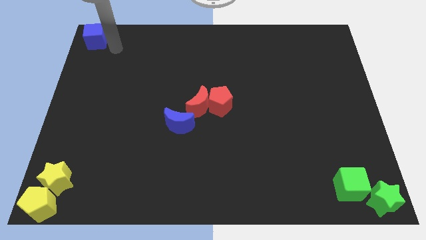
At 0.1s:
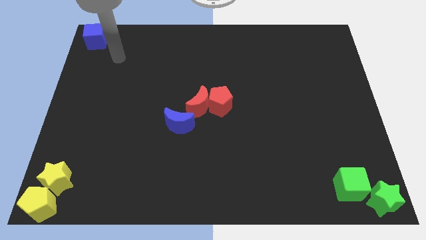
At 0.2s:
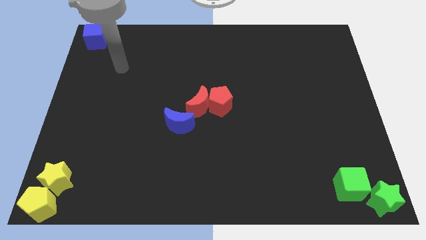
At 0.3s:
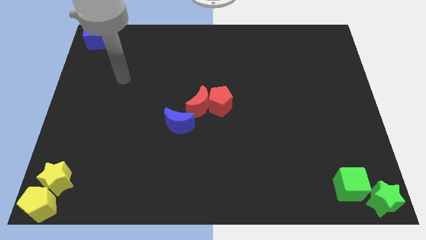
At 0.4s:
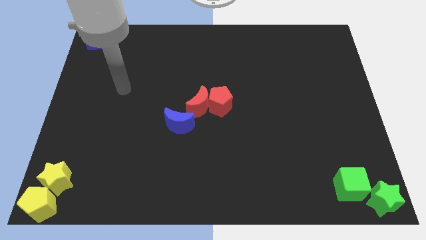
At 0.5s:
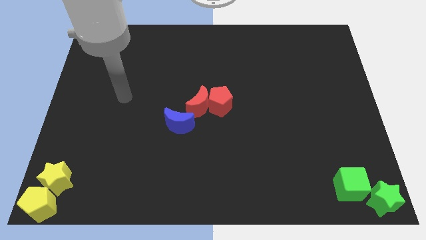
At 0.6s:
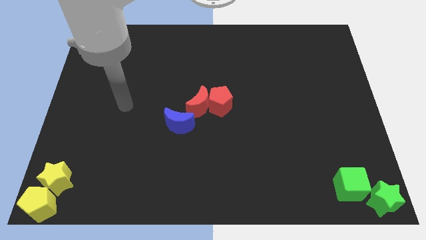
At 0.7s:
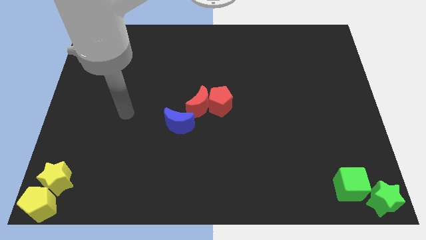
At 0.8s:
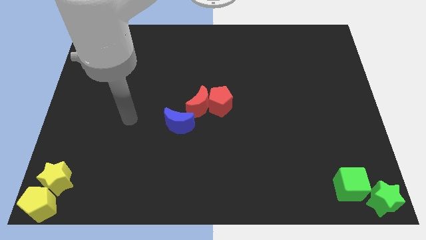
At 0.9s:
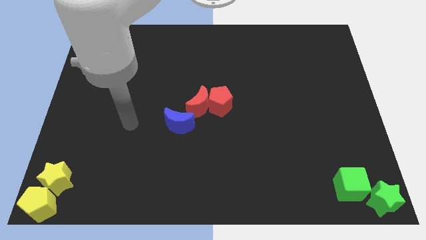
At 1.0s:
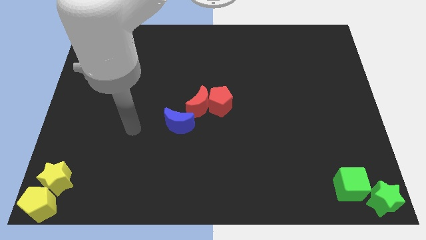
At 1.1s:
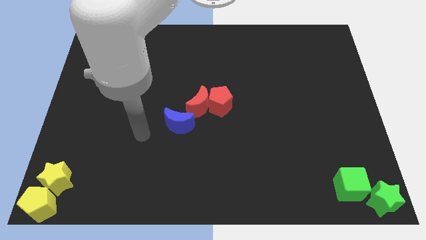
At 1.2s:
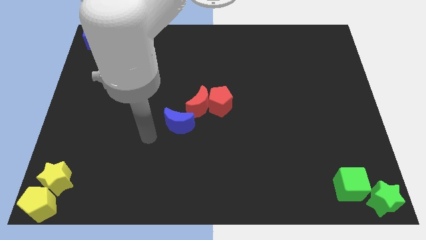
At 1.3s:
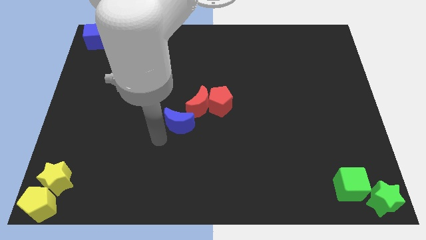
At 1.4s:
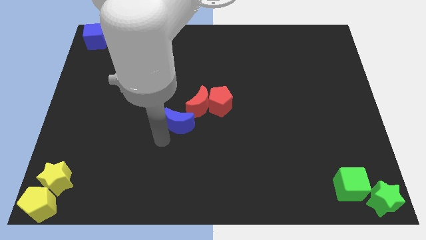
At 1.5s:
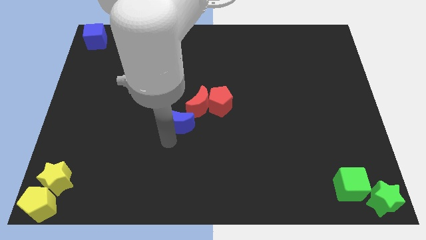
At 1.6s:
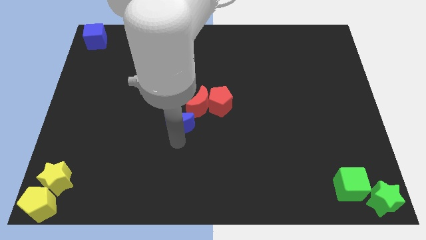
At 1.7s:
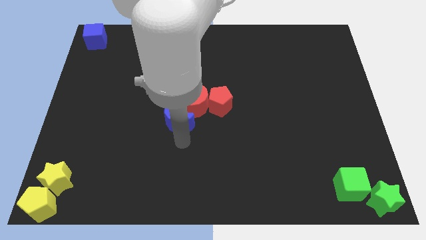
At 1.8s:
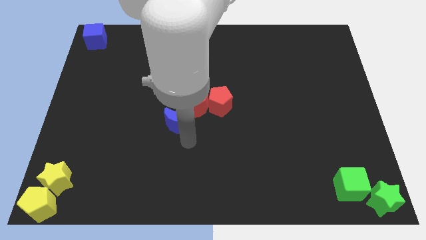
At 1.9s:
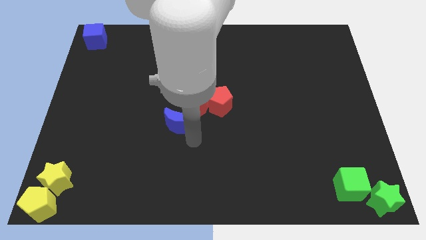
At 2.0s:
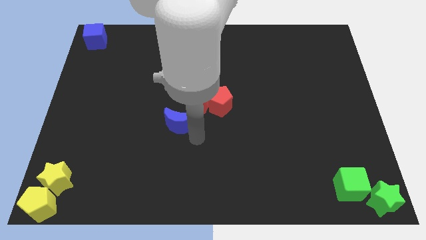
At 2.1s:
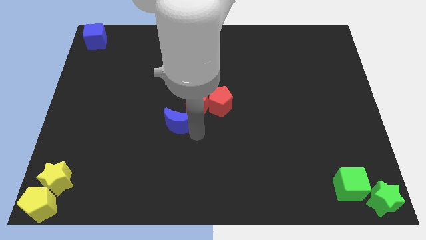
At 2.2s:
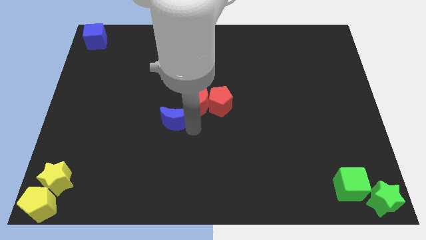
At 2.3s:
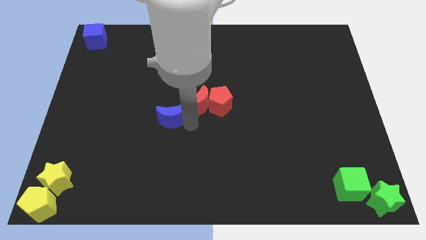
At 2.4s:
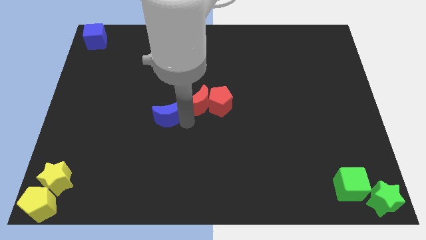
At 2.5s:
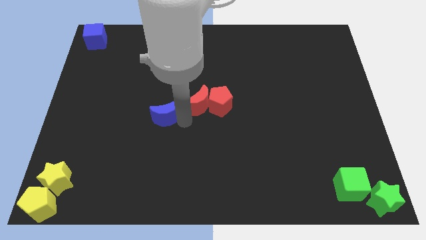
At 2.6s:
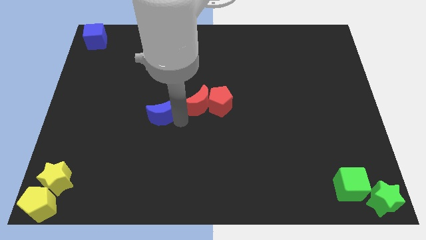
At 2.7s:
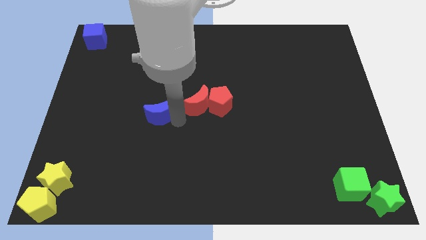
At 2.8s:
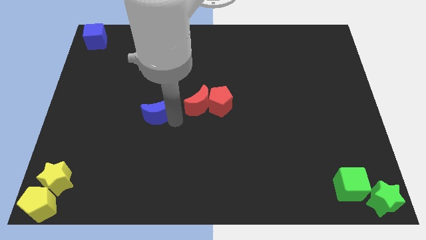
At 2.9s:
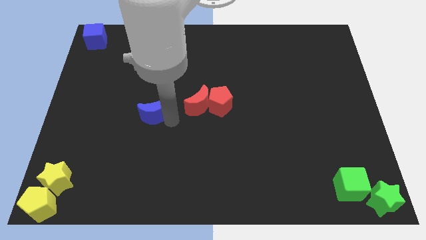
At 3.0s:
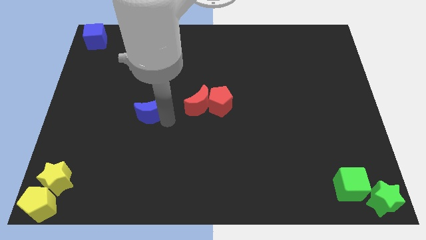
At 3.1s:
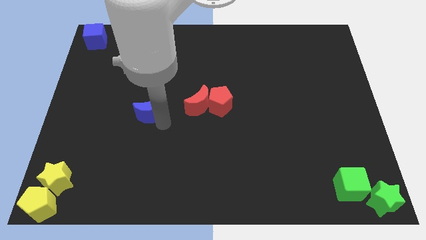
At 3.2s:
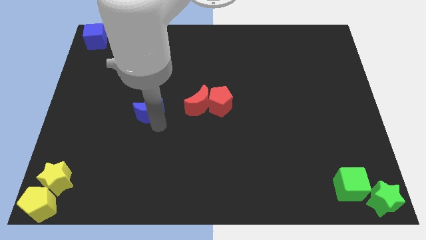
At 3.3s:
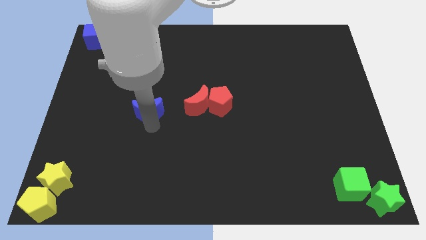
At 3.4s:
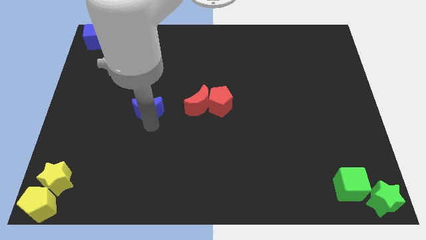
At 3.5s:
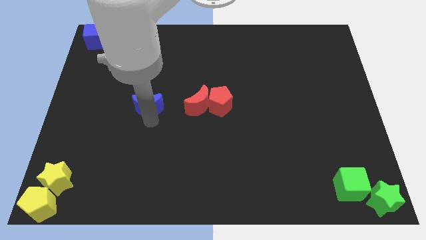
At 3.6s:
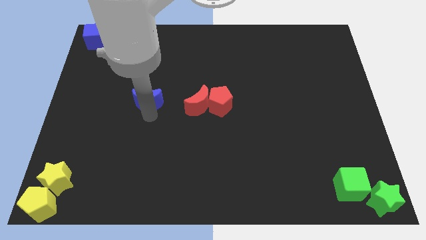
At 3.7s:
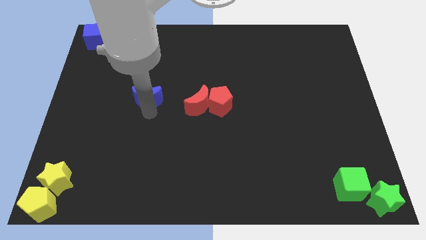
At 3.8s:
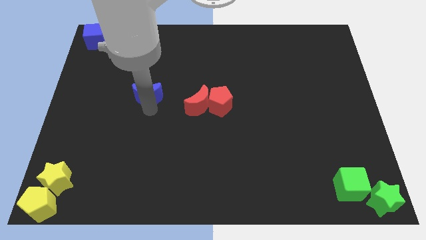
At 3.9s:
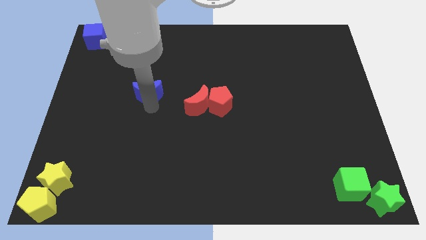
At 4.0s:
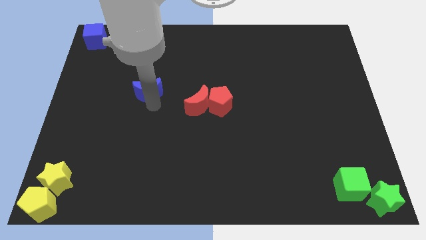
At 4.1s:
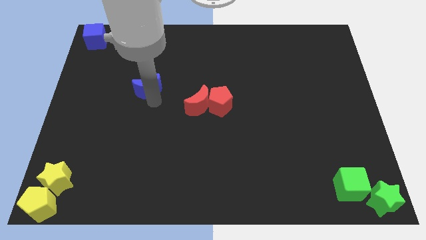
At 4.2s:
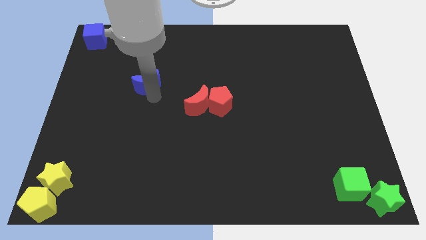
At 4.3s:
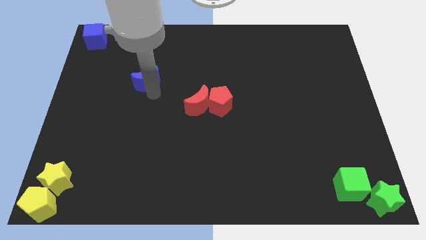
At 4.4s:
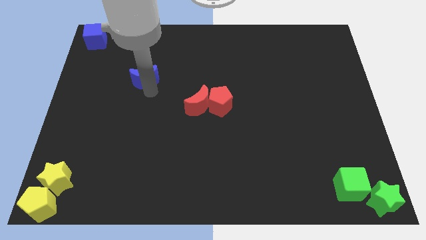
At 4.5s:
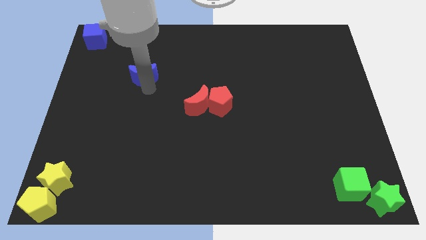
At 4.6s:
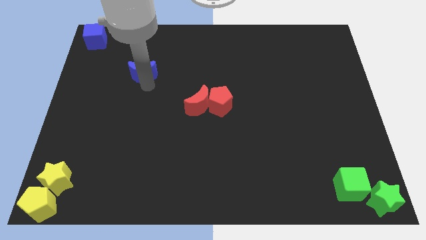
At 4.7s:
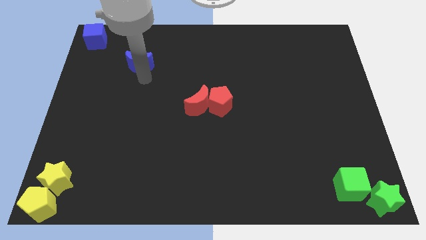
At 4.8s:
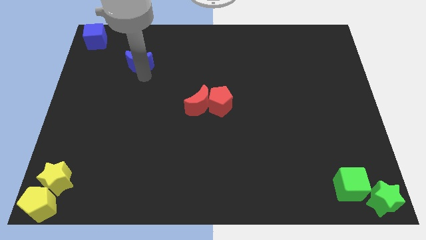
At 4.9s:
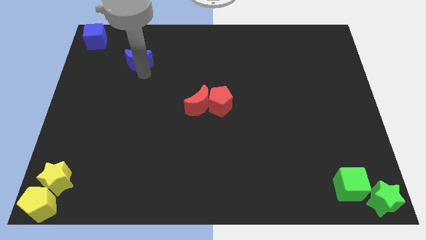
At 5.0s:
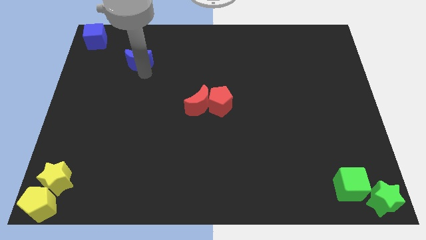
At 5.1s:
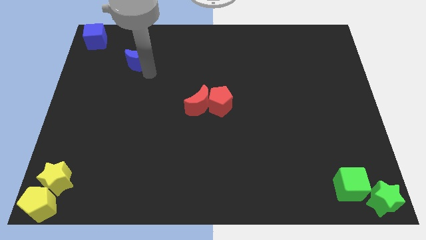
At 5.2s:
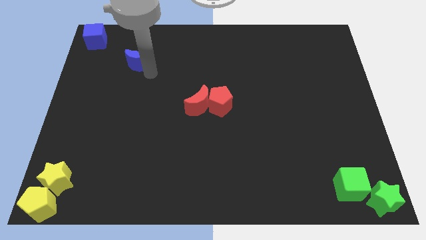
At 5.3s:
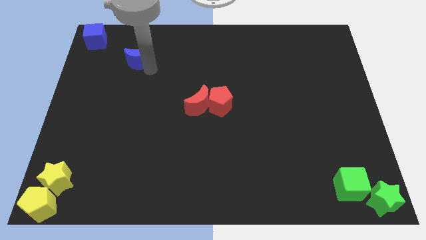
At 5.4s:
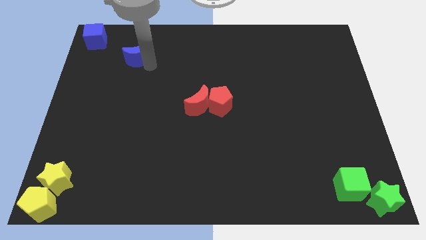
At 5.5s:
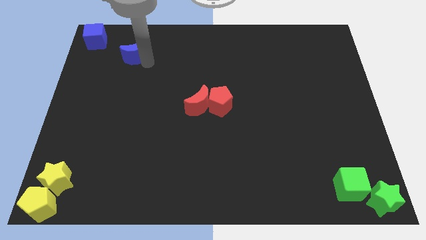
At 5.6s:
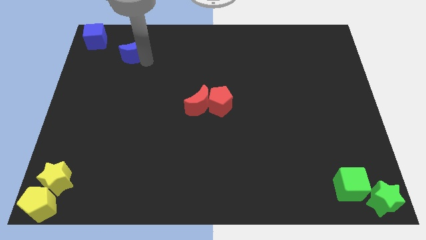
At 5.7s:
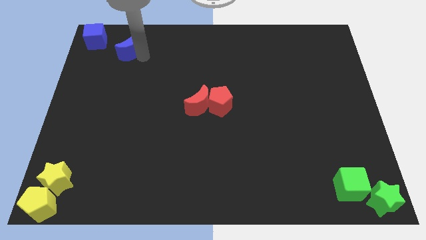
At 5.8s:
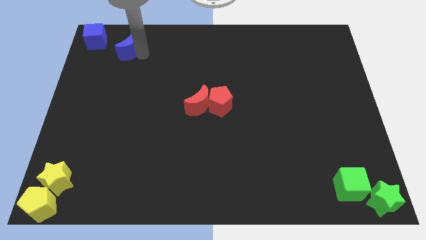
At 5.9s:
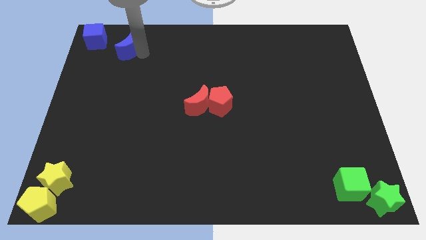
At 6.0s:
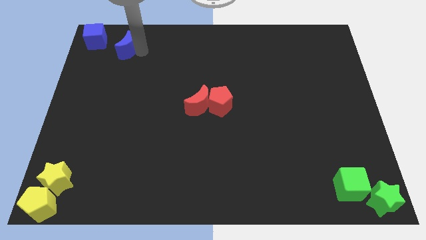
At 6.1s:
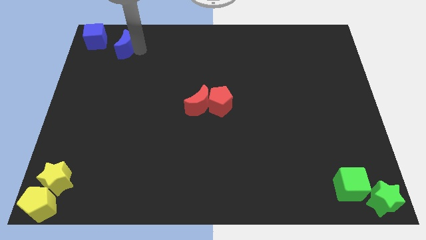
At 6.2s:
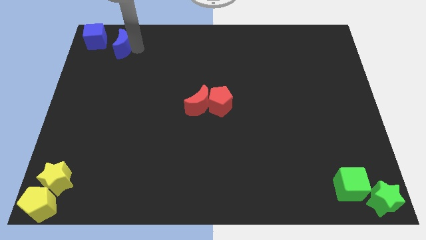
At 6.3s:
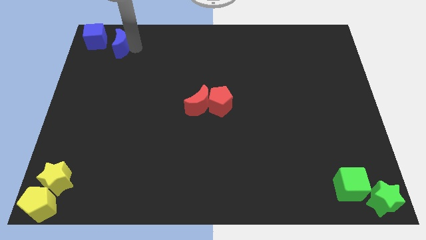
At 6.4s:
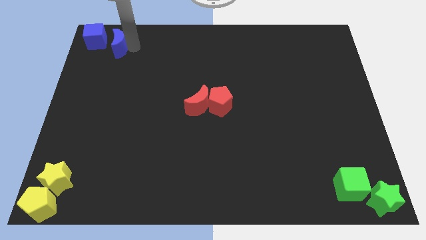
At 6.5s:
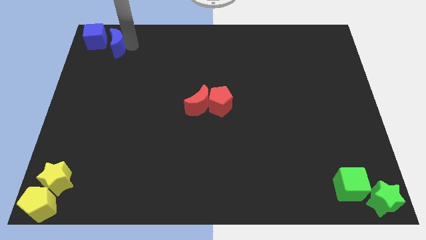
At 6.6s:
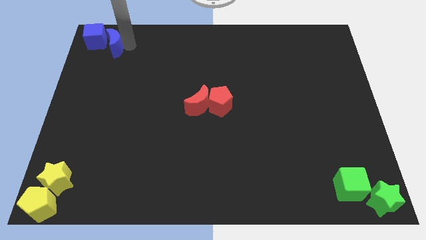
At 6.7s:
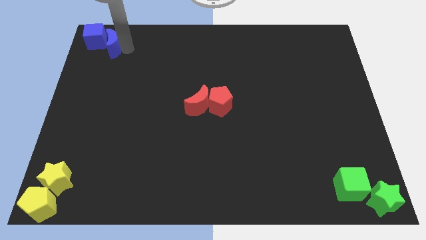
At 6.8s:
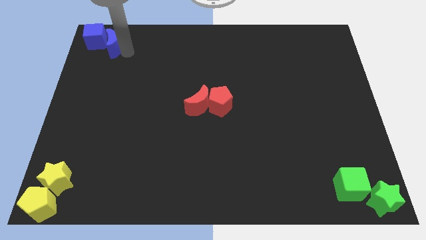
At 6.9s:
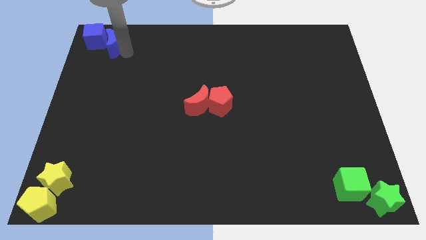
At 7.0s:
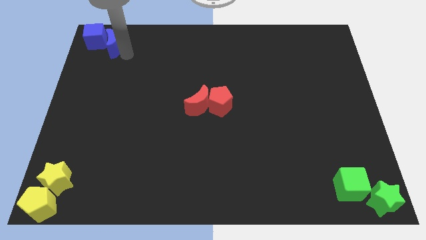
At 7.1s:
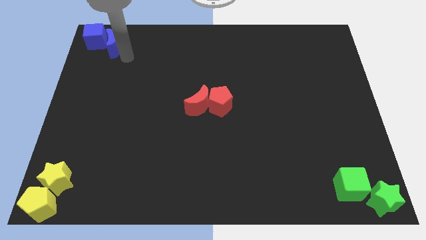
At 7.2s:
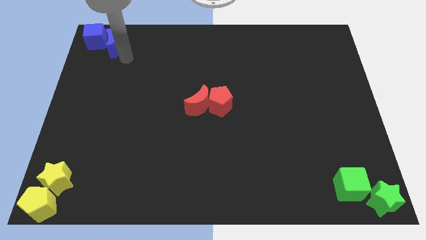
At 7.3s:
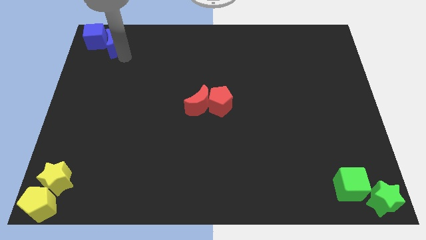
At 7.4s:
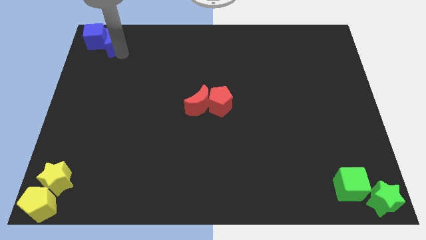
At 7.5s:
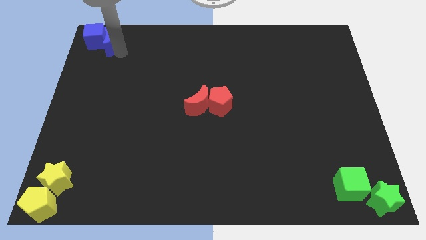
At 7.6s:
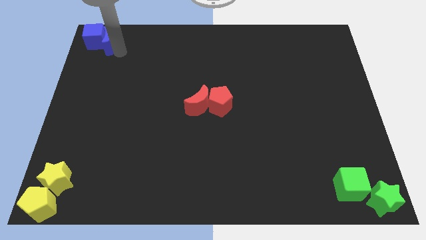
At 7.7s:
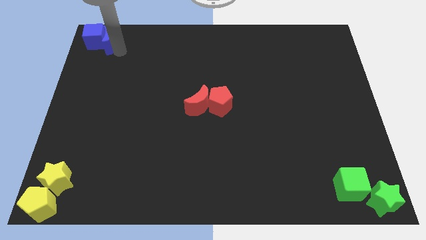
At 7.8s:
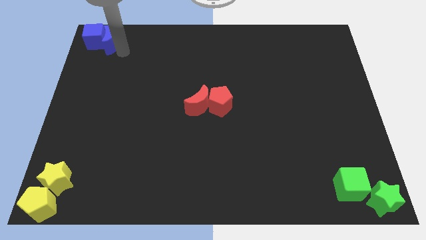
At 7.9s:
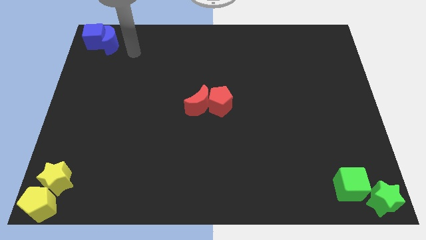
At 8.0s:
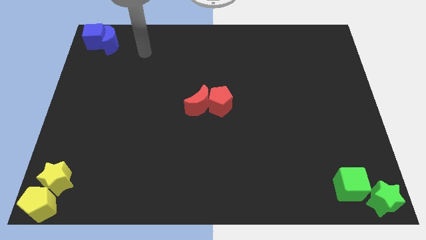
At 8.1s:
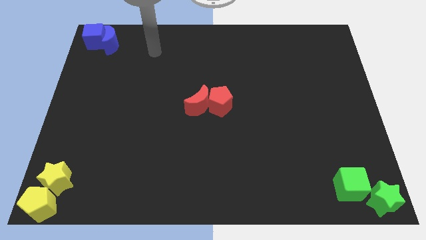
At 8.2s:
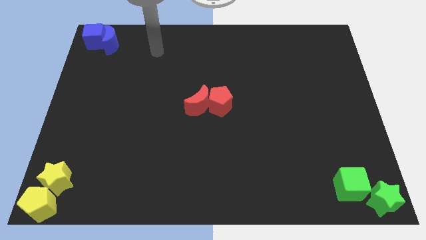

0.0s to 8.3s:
push the blue crescent towards the right of the blue cube

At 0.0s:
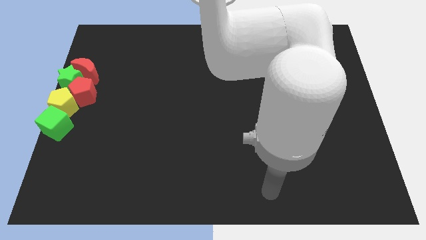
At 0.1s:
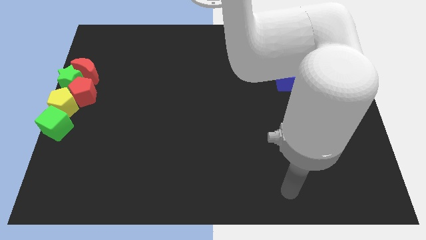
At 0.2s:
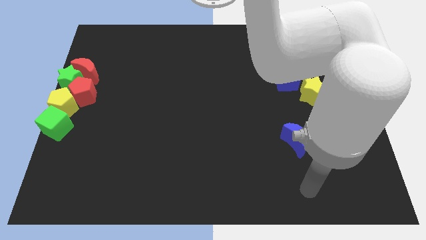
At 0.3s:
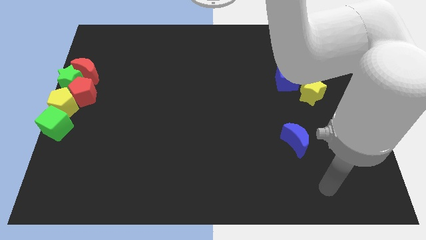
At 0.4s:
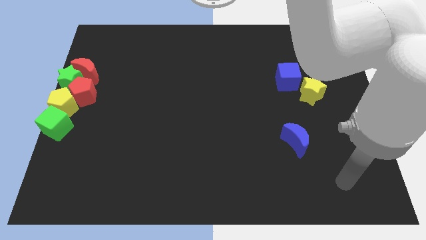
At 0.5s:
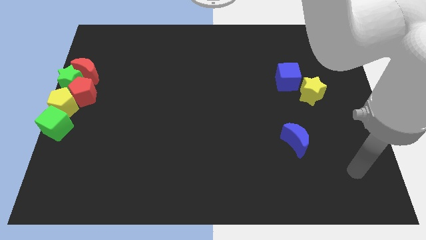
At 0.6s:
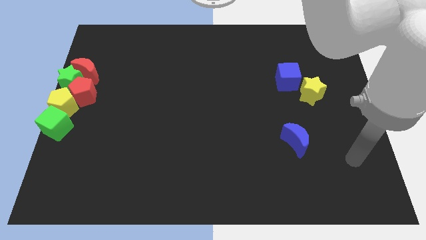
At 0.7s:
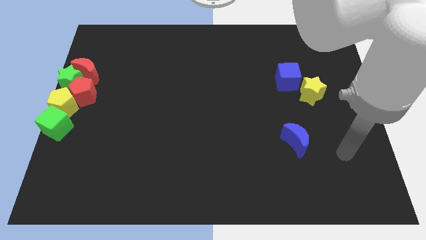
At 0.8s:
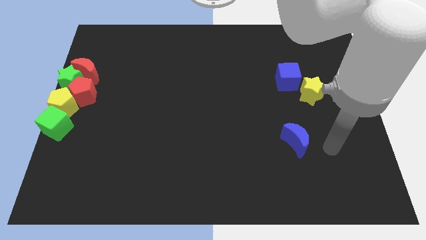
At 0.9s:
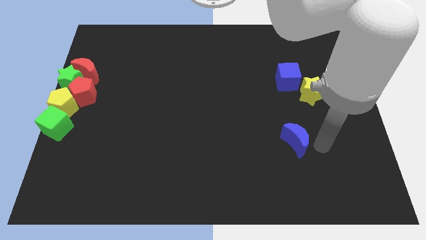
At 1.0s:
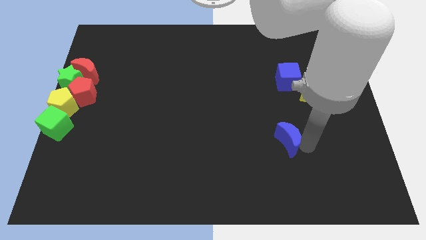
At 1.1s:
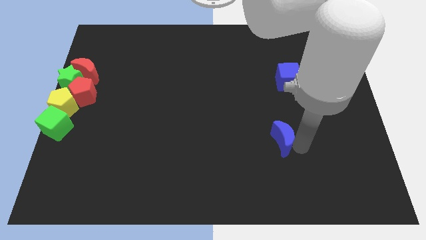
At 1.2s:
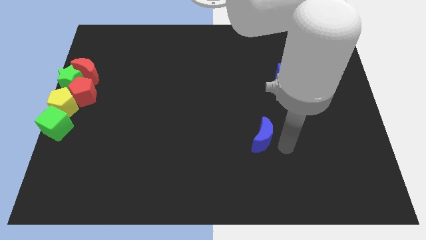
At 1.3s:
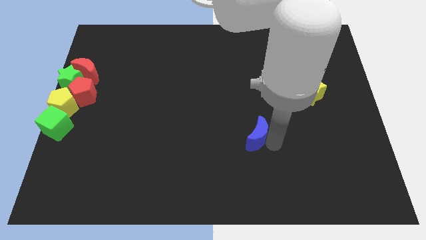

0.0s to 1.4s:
push the blue crescent towards the blocks at the left side
